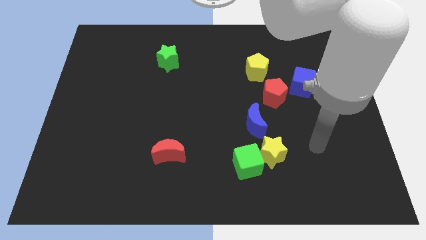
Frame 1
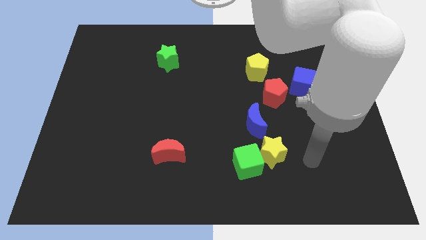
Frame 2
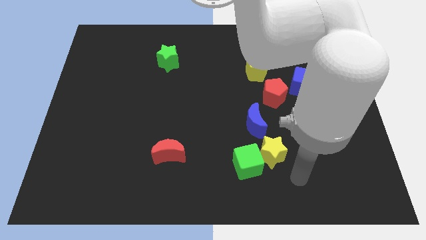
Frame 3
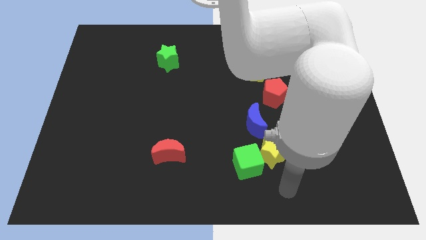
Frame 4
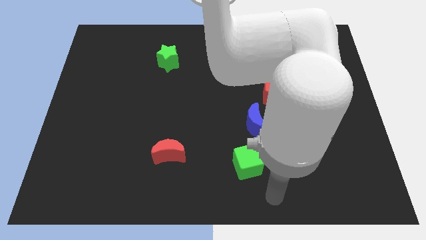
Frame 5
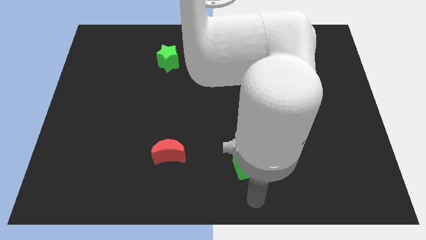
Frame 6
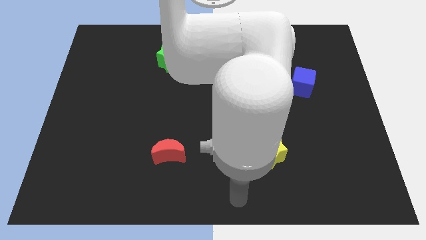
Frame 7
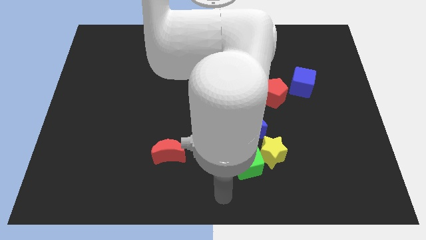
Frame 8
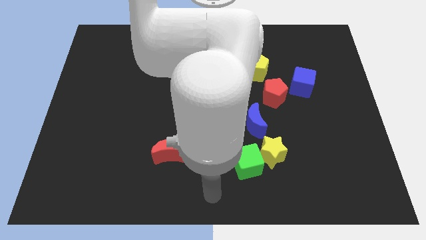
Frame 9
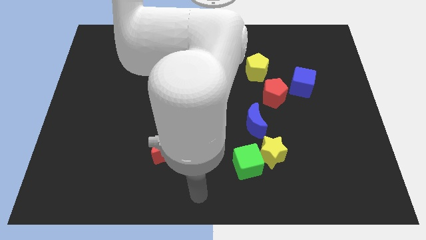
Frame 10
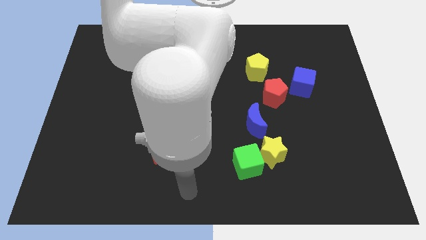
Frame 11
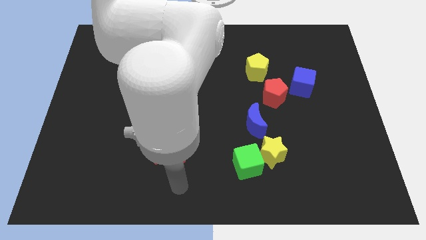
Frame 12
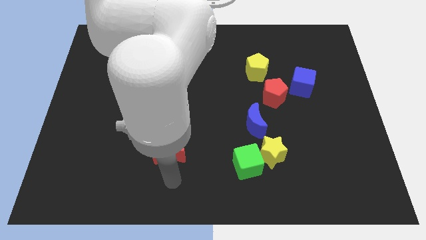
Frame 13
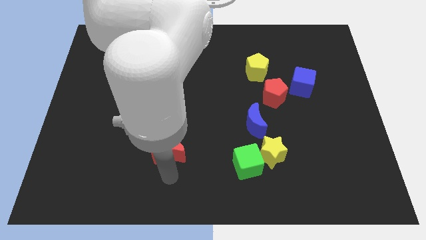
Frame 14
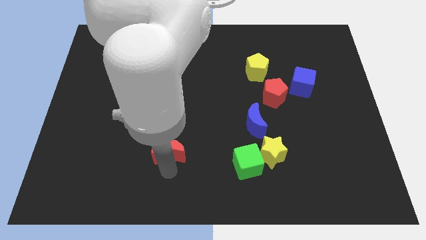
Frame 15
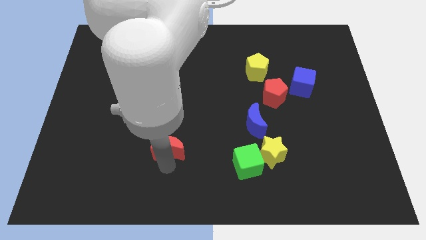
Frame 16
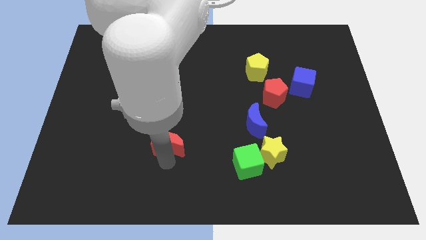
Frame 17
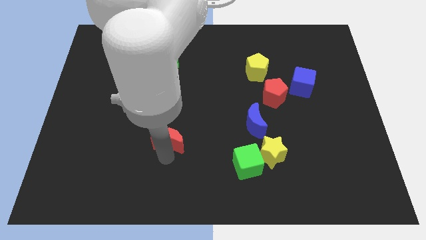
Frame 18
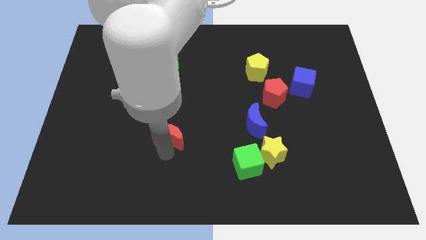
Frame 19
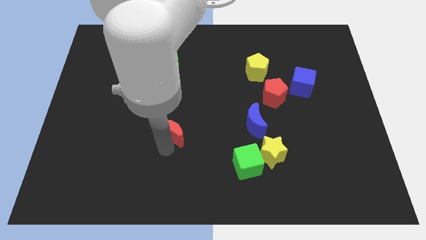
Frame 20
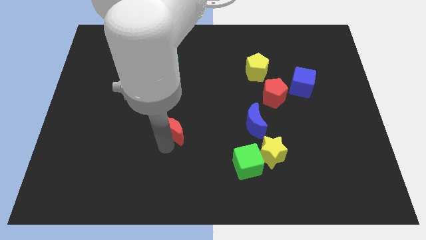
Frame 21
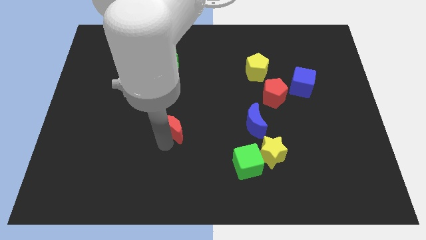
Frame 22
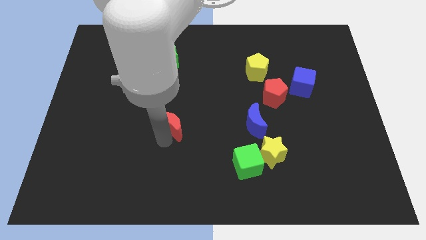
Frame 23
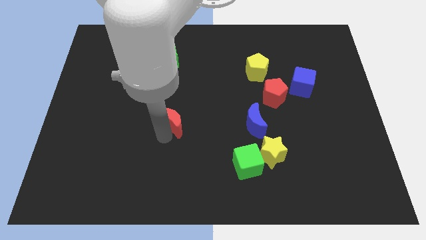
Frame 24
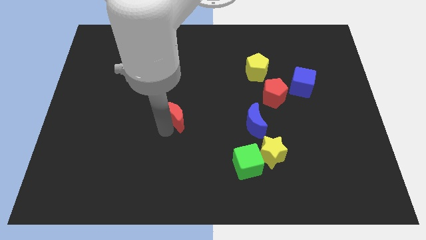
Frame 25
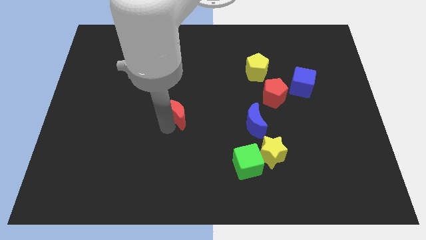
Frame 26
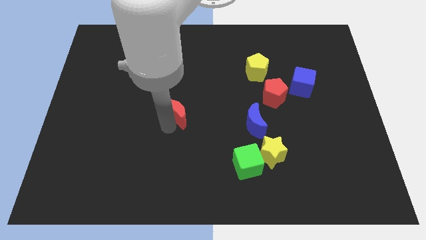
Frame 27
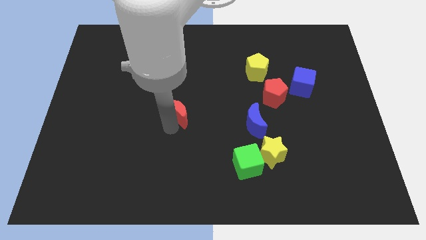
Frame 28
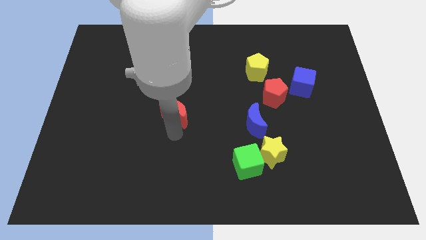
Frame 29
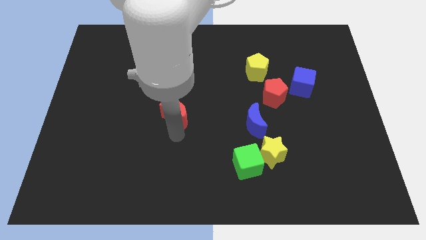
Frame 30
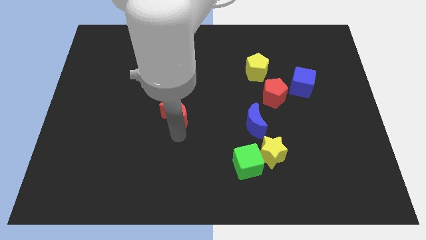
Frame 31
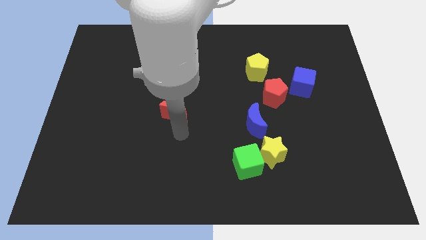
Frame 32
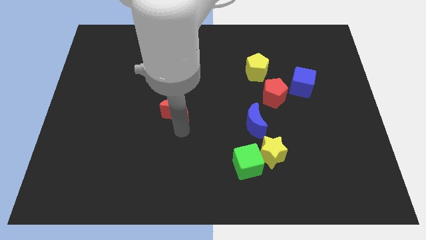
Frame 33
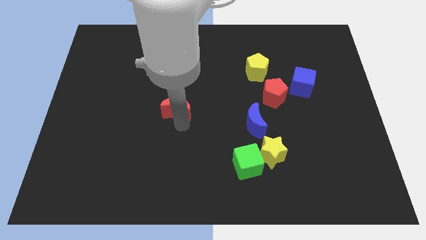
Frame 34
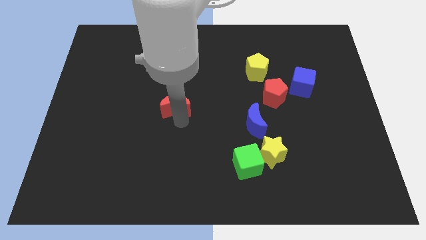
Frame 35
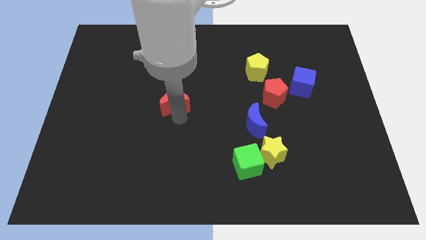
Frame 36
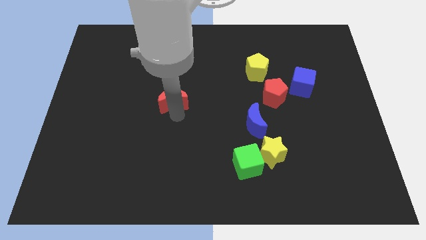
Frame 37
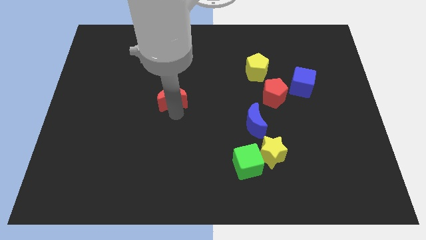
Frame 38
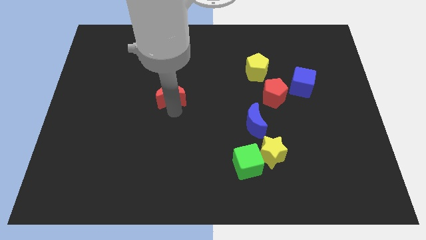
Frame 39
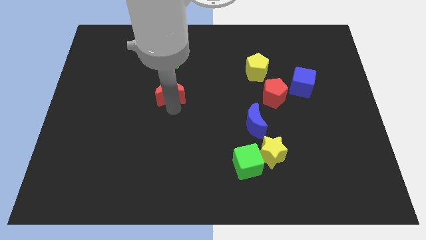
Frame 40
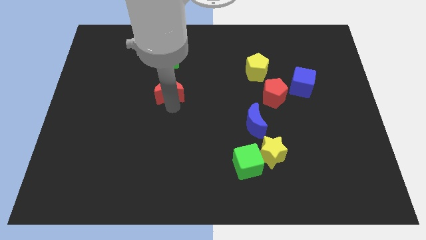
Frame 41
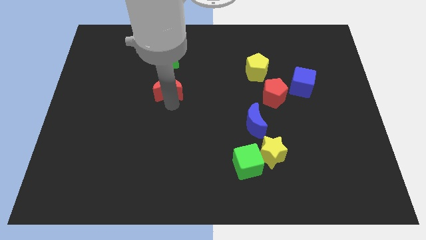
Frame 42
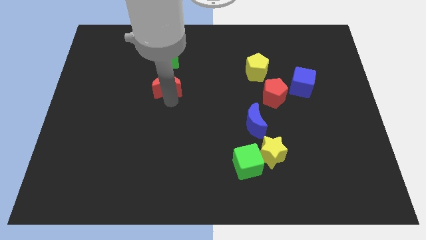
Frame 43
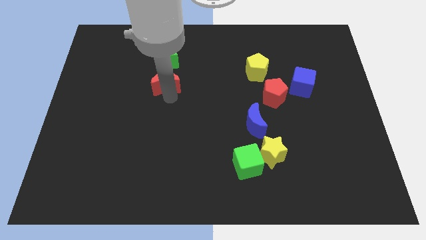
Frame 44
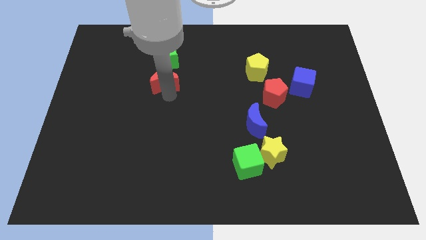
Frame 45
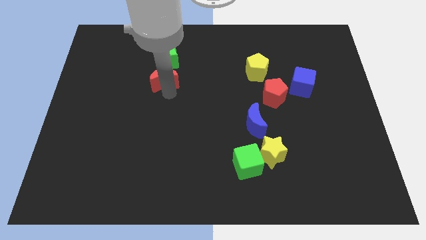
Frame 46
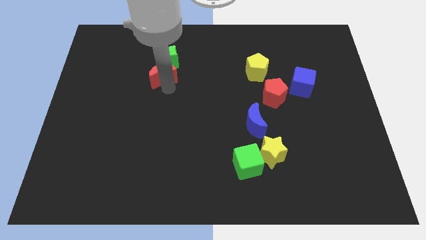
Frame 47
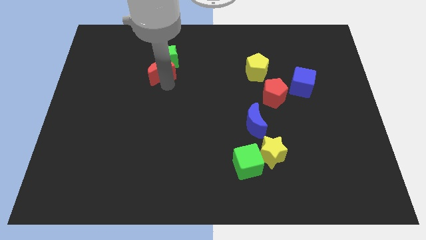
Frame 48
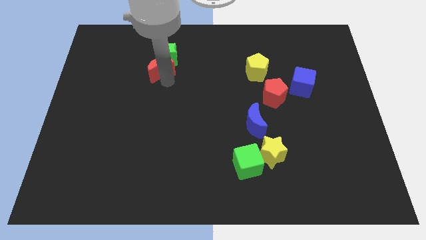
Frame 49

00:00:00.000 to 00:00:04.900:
move the red moon next to the green star

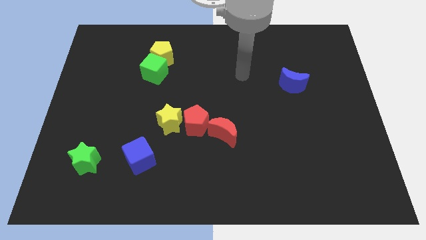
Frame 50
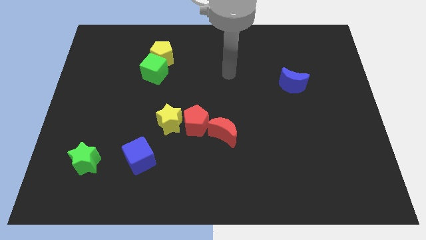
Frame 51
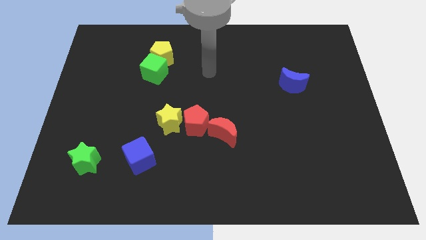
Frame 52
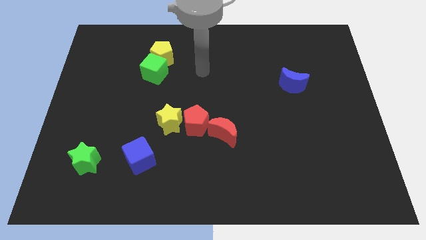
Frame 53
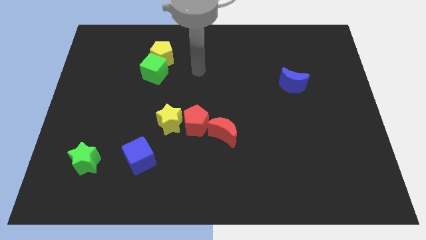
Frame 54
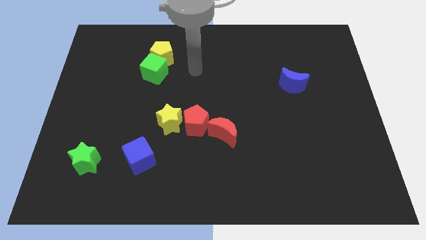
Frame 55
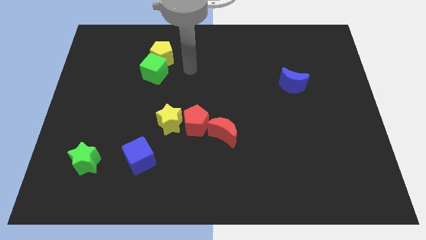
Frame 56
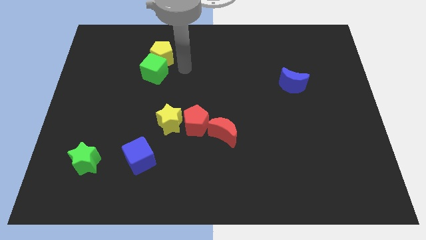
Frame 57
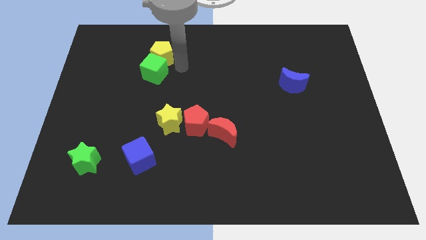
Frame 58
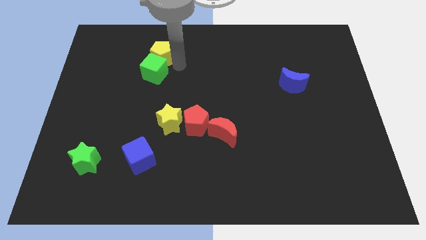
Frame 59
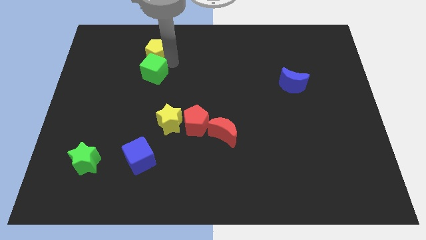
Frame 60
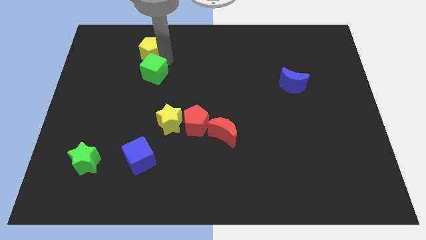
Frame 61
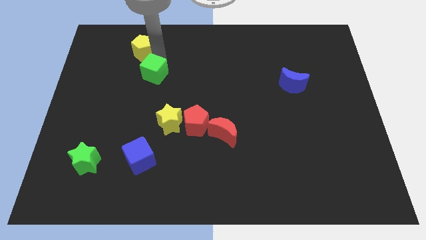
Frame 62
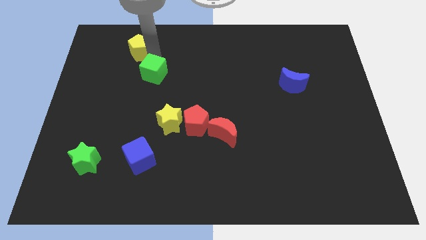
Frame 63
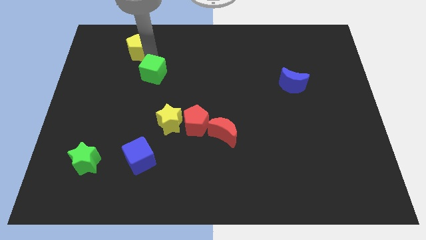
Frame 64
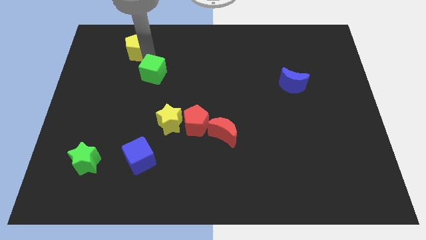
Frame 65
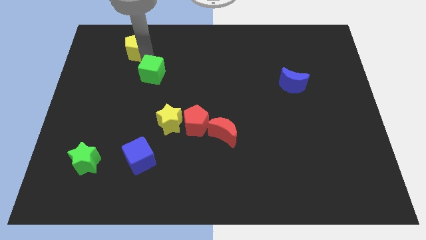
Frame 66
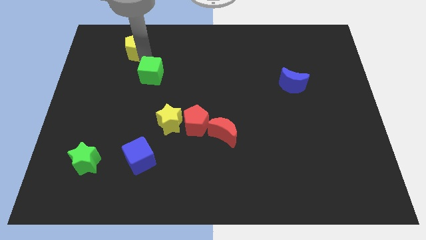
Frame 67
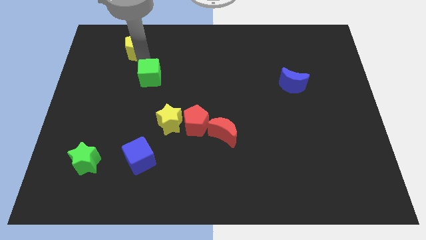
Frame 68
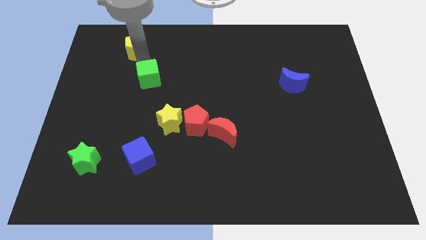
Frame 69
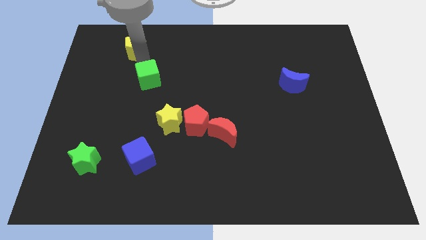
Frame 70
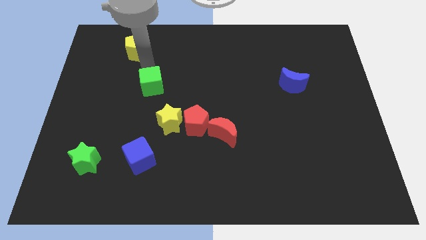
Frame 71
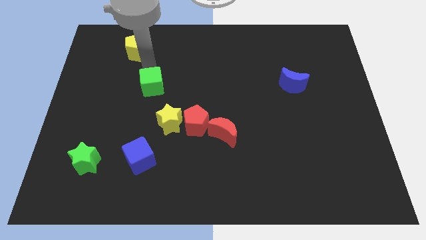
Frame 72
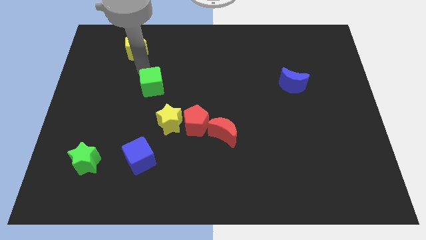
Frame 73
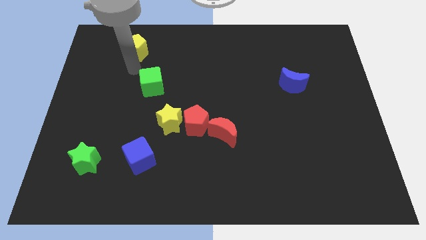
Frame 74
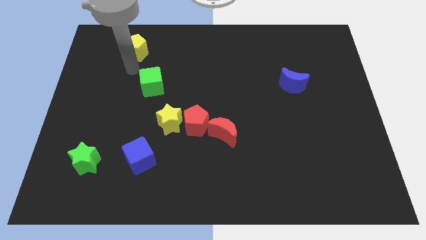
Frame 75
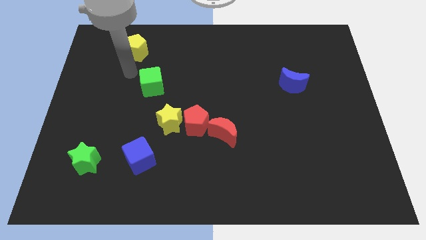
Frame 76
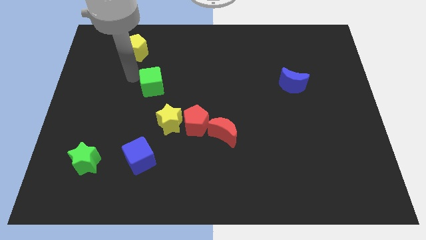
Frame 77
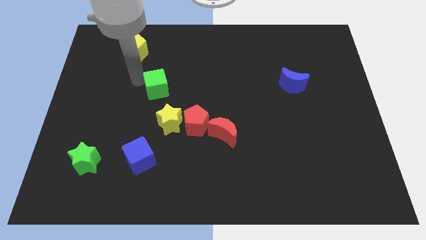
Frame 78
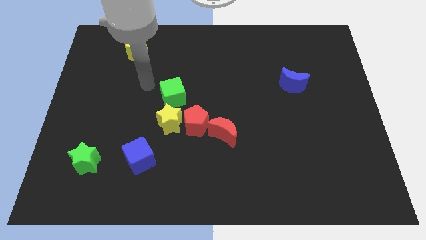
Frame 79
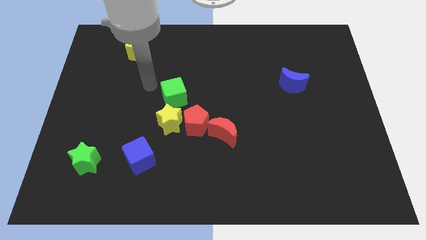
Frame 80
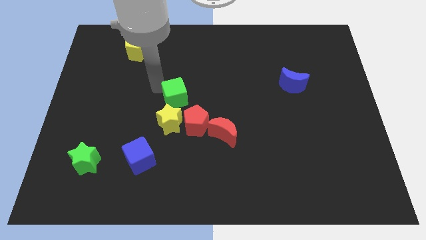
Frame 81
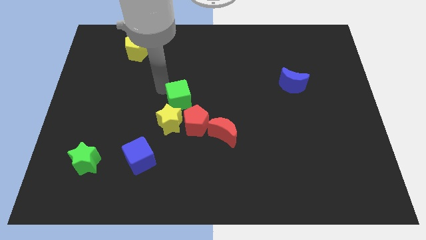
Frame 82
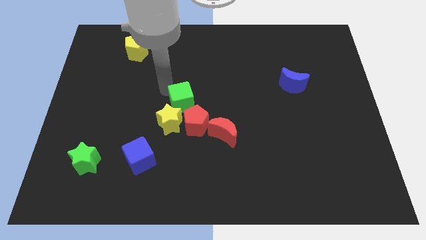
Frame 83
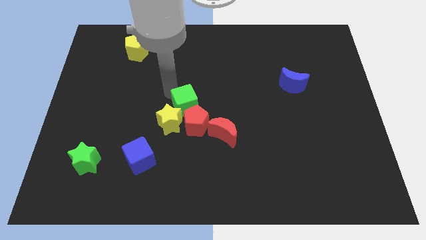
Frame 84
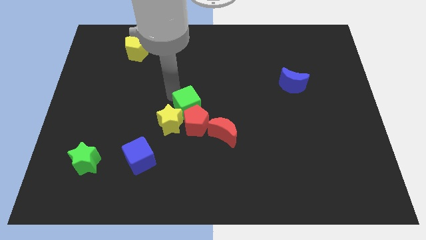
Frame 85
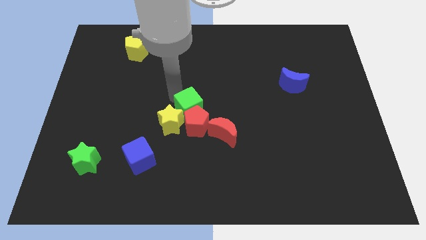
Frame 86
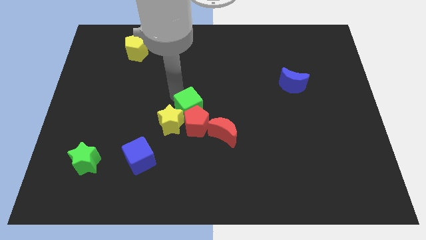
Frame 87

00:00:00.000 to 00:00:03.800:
put the green cube close to the red pentagon
